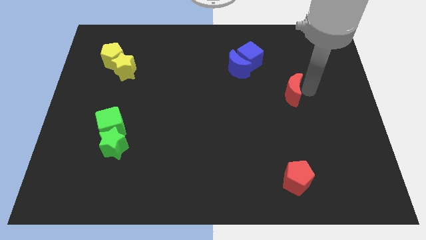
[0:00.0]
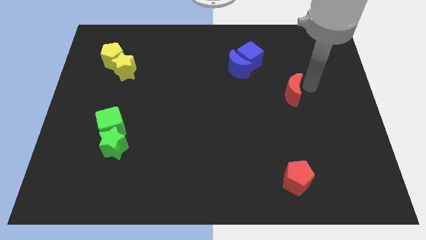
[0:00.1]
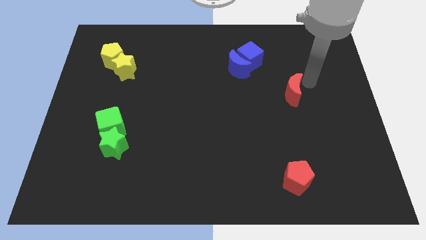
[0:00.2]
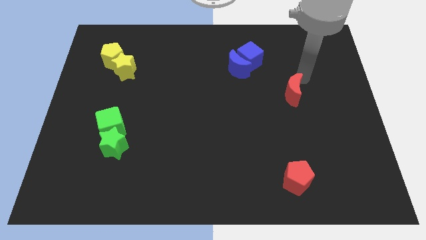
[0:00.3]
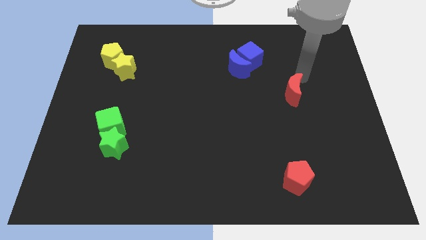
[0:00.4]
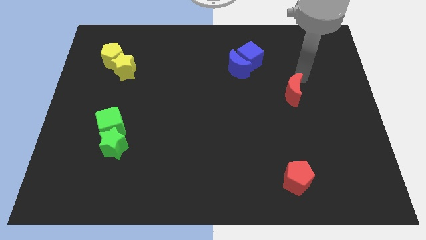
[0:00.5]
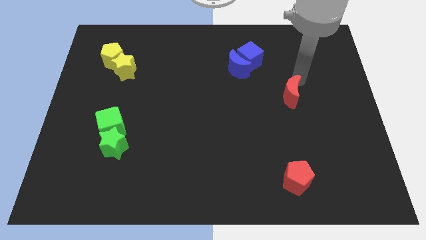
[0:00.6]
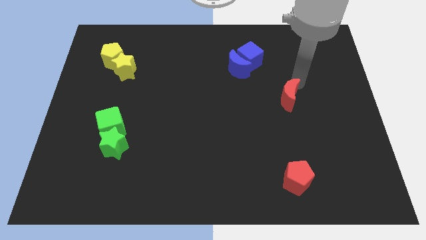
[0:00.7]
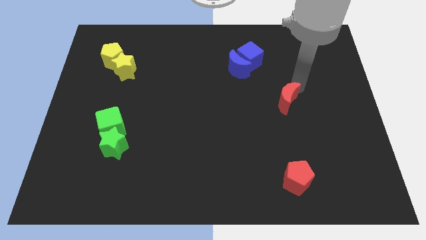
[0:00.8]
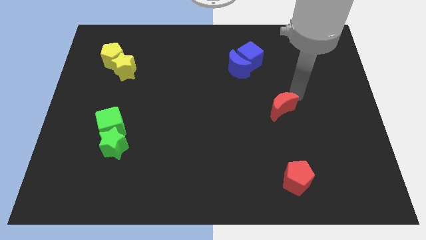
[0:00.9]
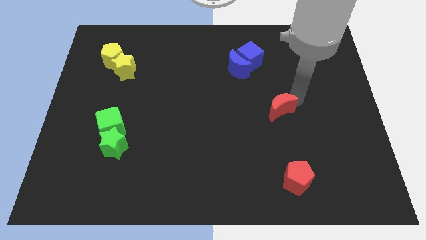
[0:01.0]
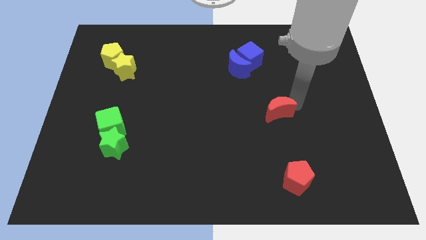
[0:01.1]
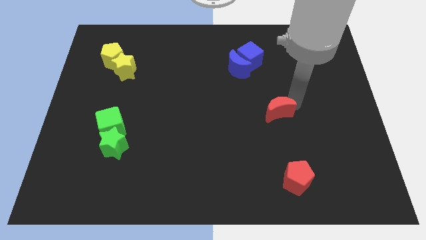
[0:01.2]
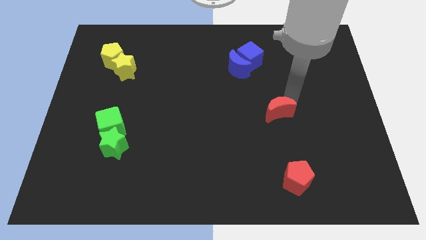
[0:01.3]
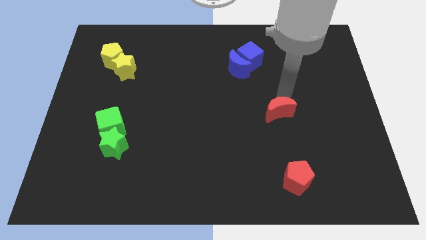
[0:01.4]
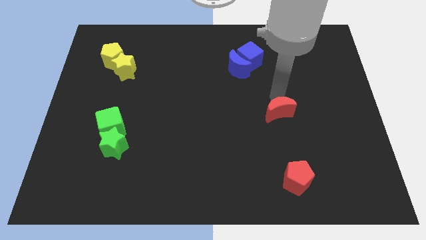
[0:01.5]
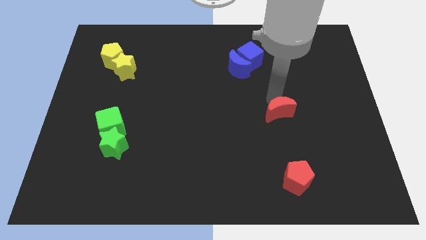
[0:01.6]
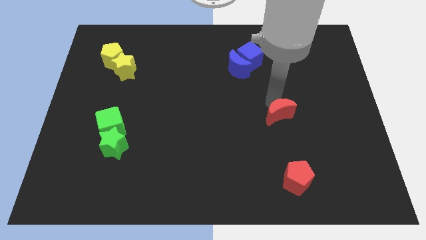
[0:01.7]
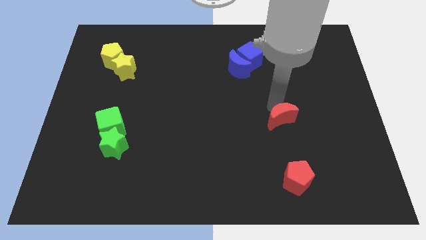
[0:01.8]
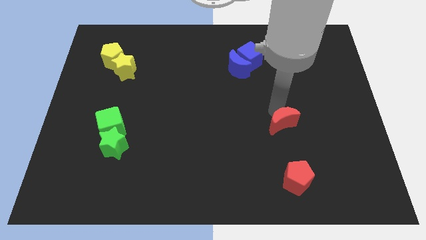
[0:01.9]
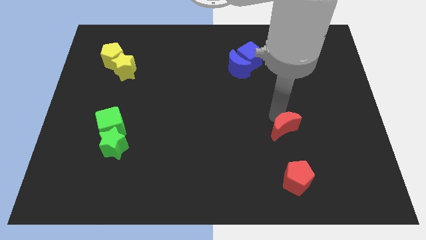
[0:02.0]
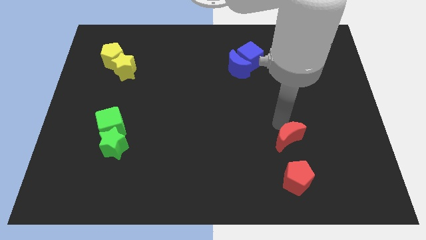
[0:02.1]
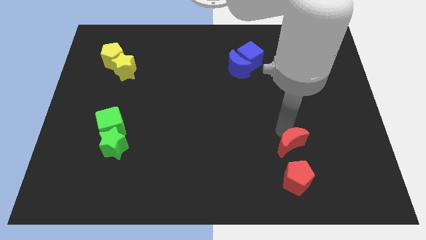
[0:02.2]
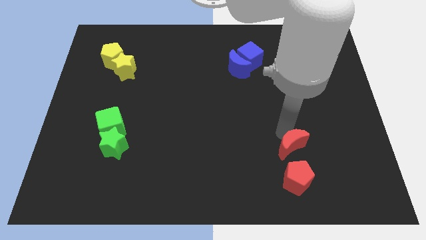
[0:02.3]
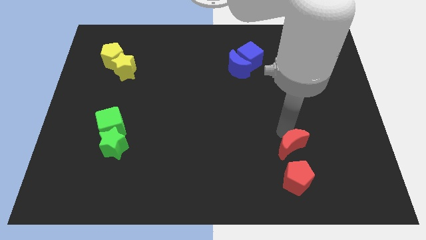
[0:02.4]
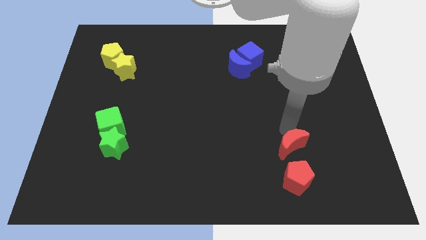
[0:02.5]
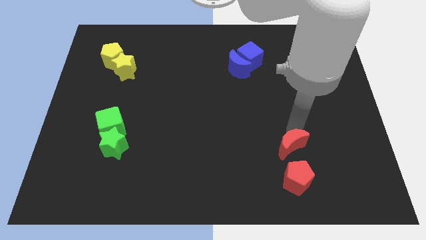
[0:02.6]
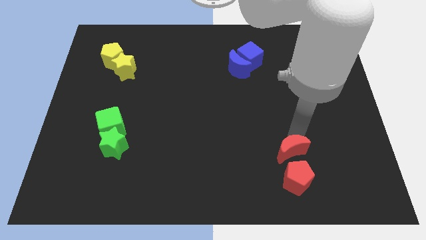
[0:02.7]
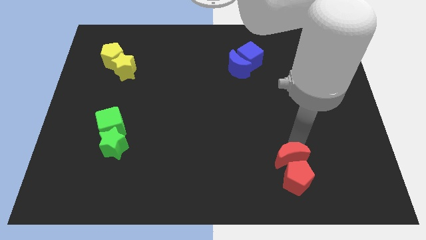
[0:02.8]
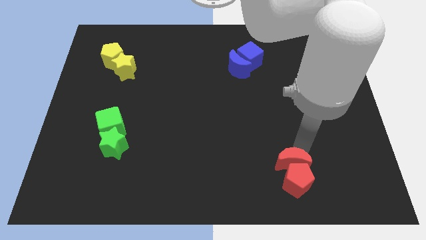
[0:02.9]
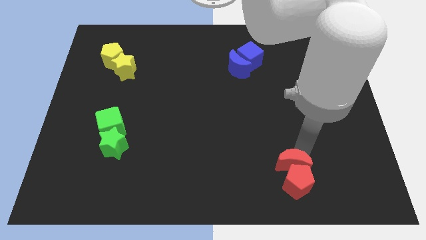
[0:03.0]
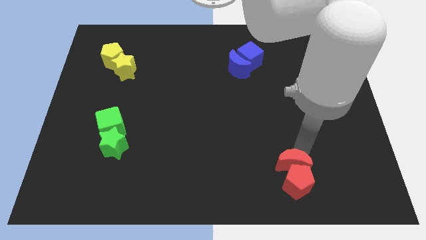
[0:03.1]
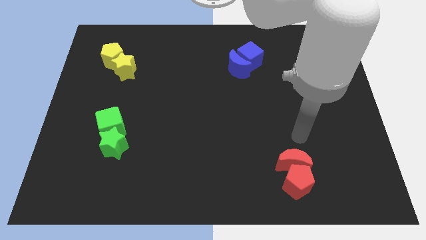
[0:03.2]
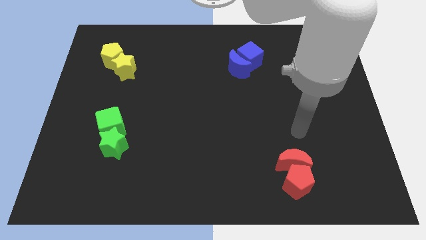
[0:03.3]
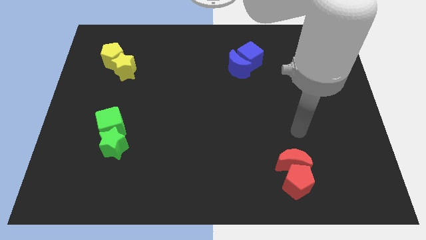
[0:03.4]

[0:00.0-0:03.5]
move the red moon above the red pentagon

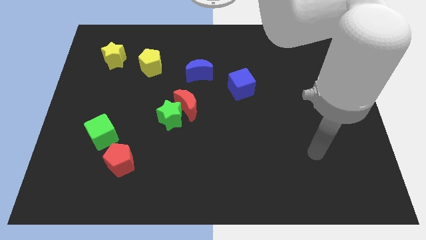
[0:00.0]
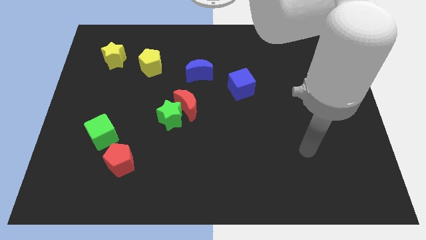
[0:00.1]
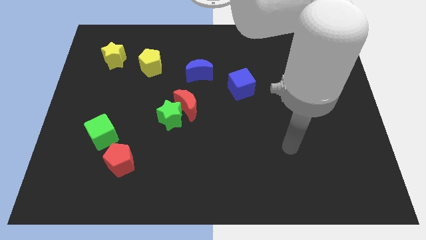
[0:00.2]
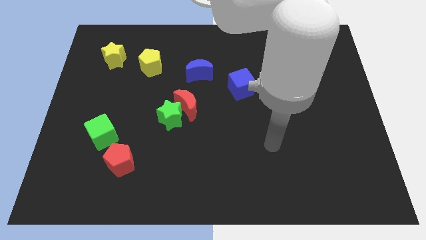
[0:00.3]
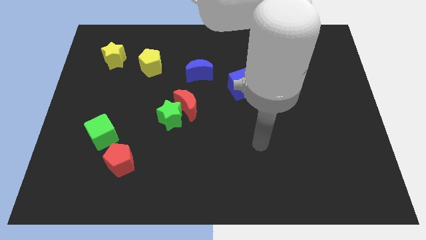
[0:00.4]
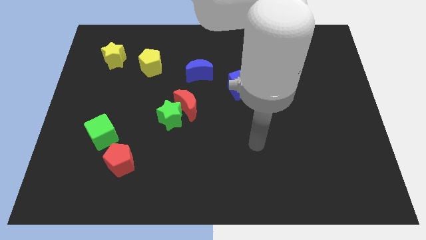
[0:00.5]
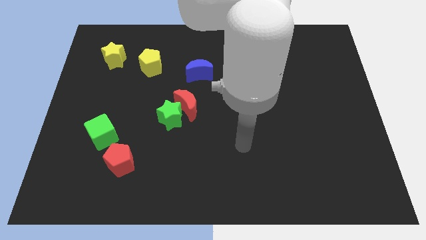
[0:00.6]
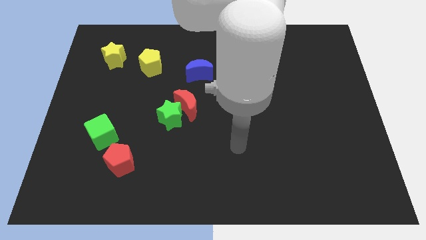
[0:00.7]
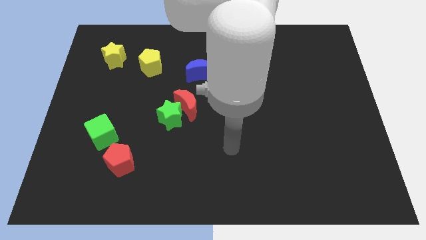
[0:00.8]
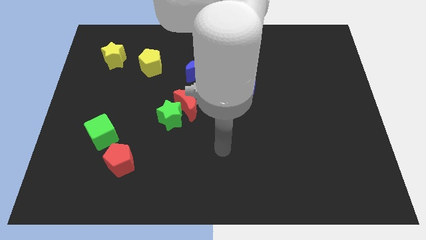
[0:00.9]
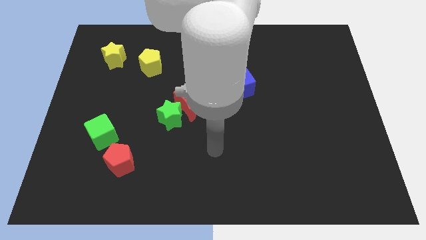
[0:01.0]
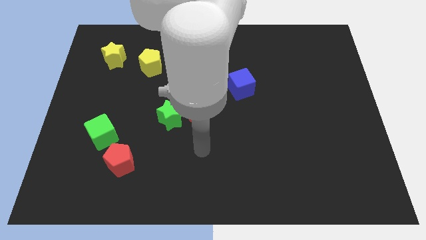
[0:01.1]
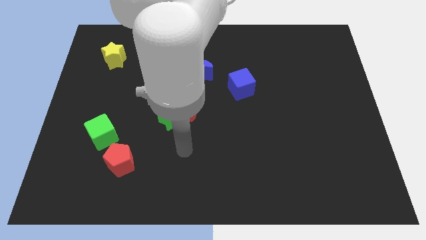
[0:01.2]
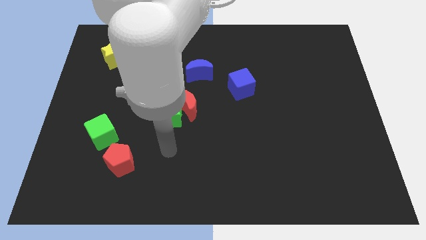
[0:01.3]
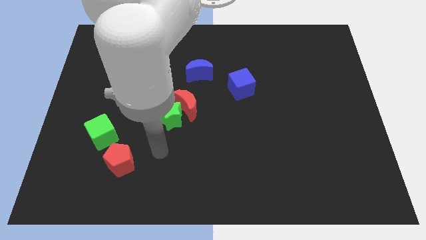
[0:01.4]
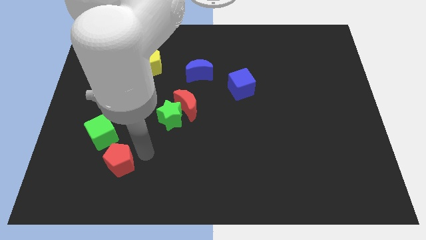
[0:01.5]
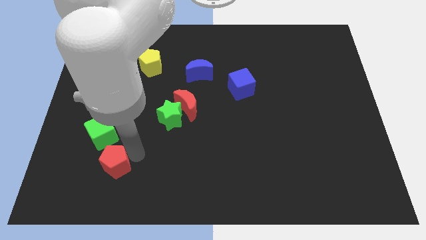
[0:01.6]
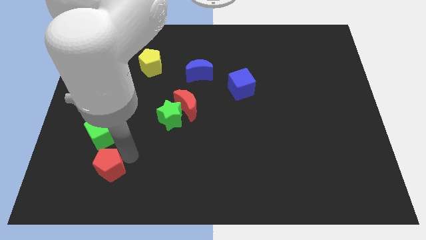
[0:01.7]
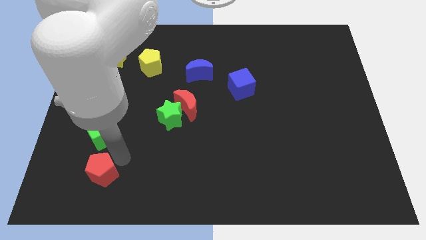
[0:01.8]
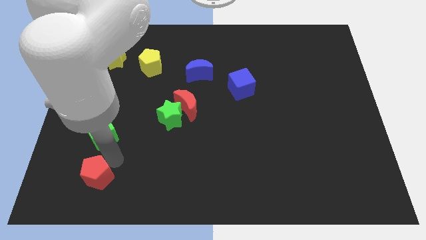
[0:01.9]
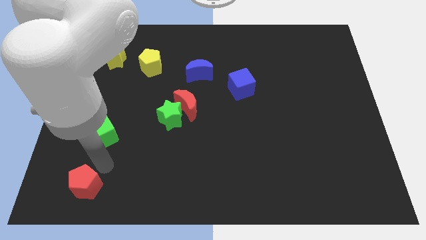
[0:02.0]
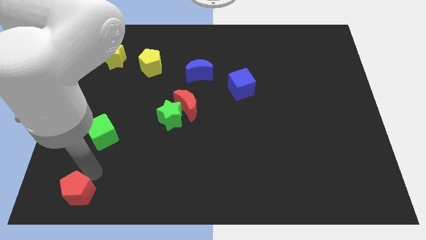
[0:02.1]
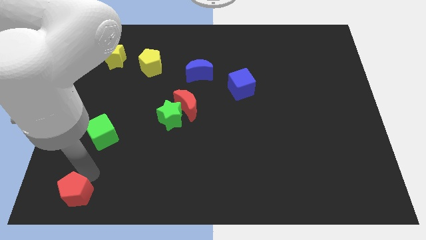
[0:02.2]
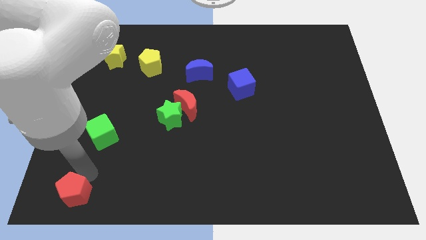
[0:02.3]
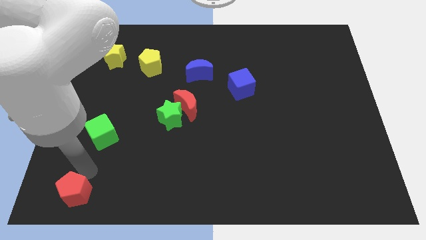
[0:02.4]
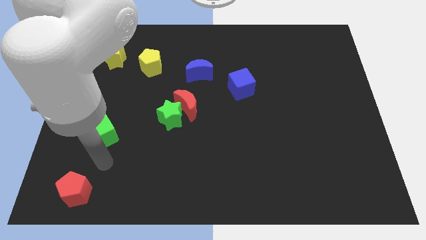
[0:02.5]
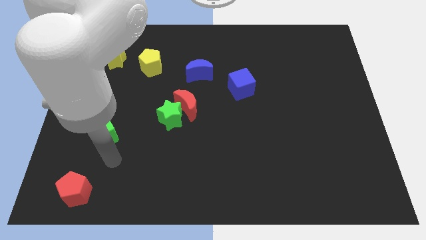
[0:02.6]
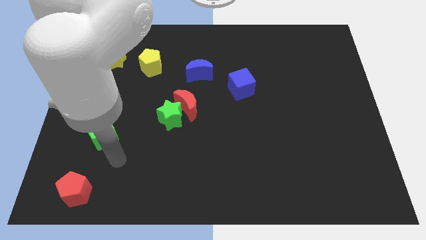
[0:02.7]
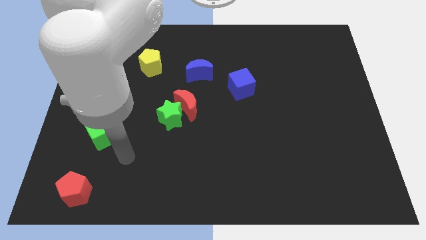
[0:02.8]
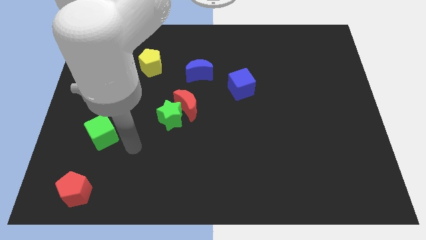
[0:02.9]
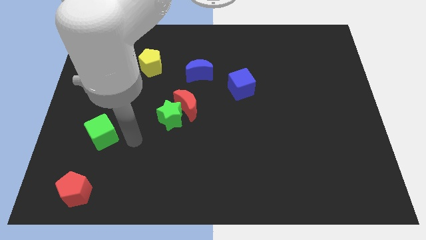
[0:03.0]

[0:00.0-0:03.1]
place red pentagon near to left bottom corner

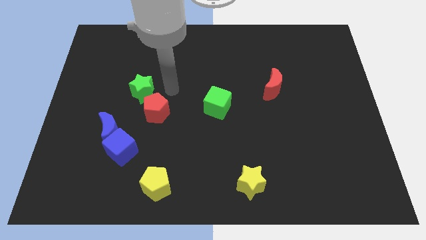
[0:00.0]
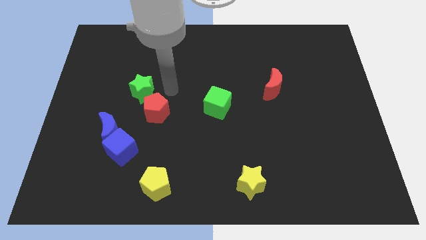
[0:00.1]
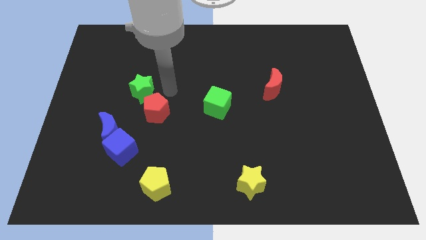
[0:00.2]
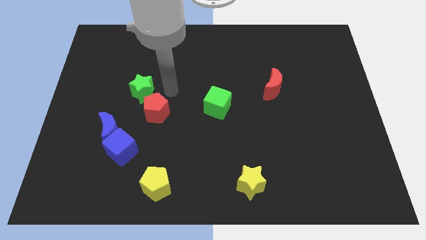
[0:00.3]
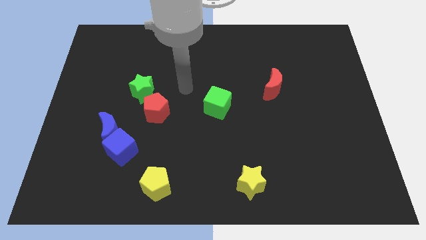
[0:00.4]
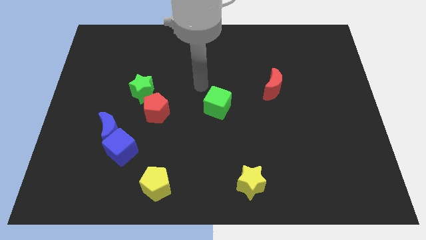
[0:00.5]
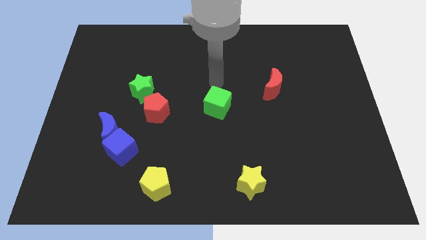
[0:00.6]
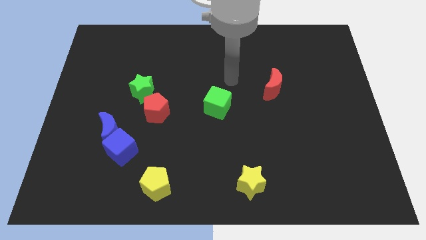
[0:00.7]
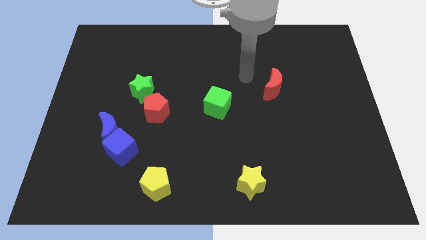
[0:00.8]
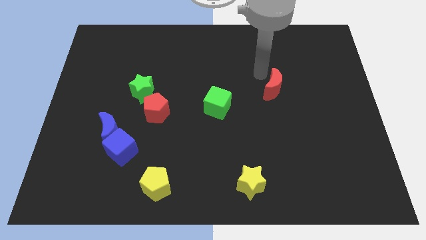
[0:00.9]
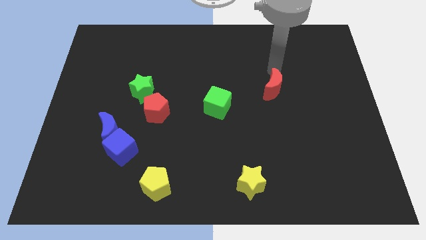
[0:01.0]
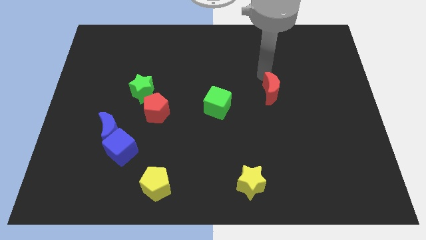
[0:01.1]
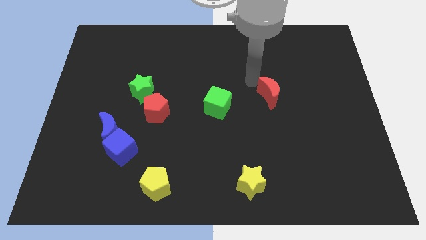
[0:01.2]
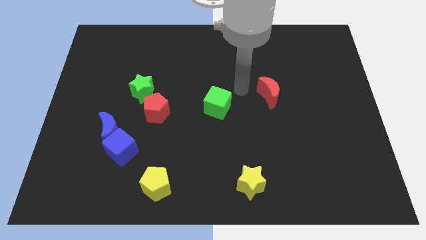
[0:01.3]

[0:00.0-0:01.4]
push the red moon slightly to the down

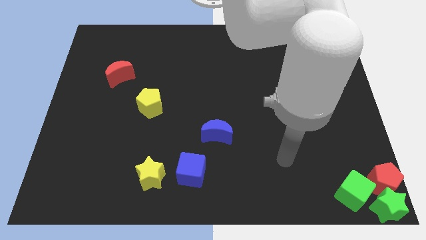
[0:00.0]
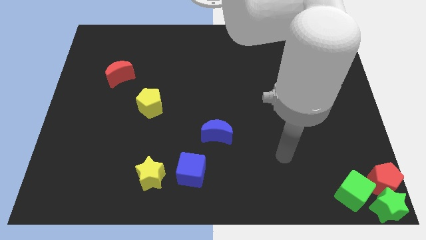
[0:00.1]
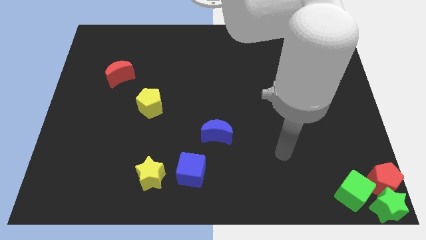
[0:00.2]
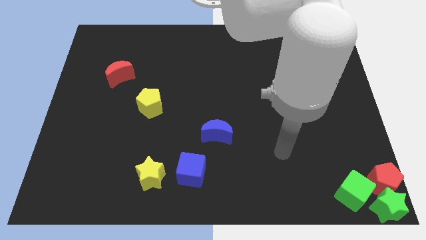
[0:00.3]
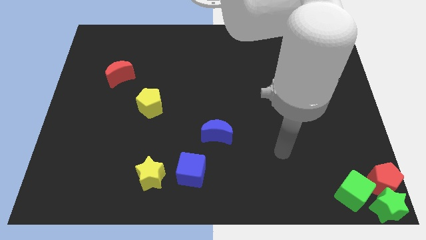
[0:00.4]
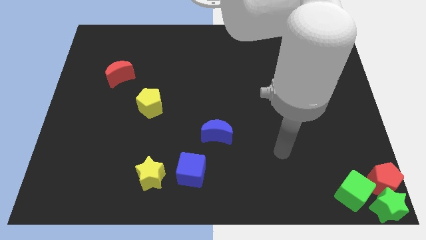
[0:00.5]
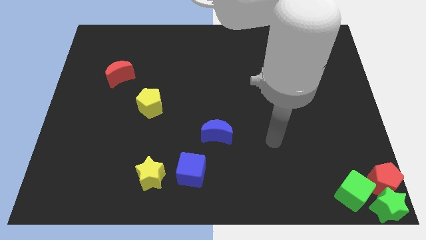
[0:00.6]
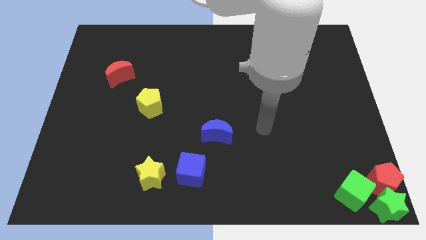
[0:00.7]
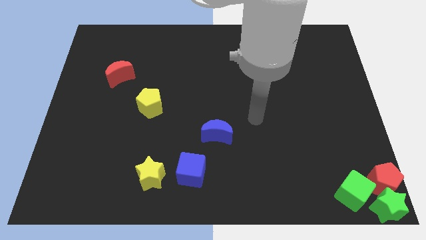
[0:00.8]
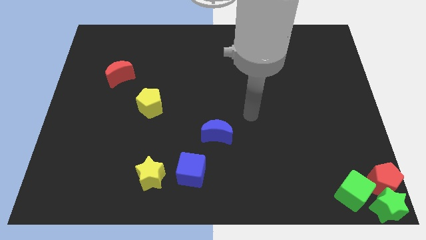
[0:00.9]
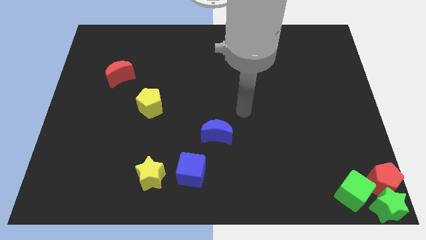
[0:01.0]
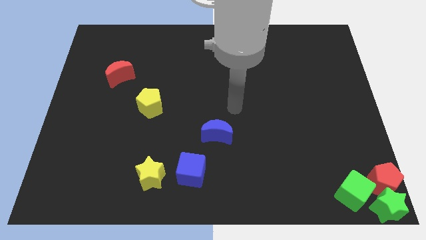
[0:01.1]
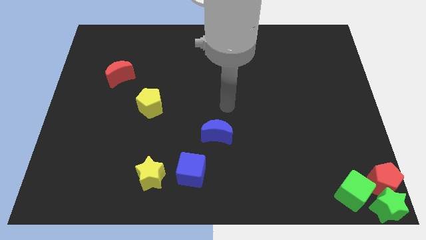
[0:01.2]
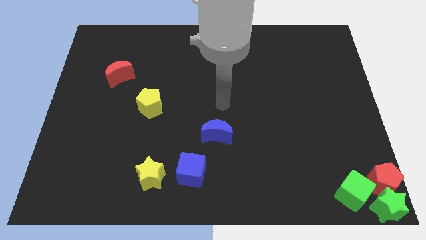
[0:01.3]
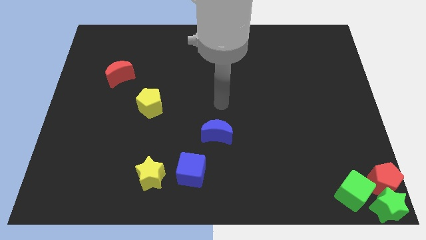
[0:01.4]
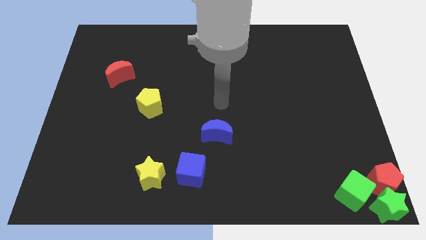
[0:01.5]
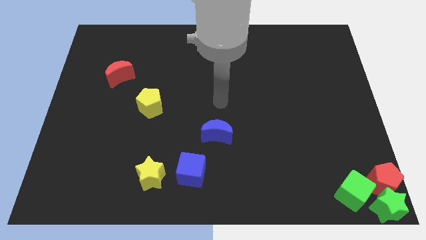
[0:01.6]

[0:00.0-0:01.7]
move your arm to the center of the board
